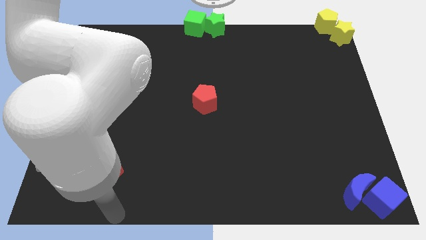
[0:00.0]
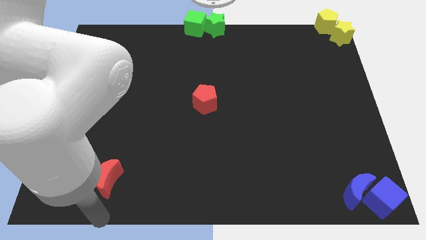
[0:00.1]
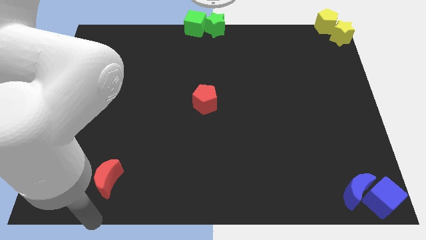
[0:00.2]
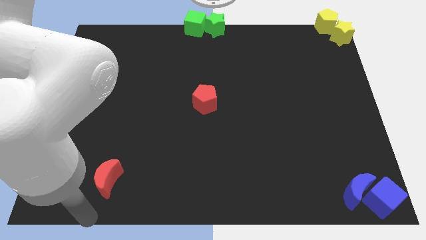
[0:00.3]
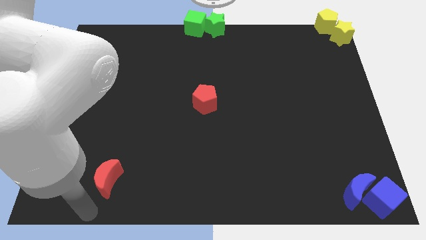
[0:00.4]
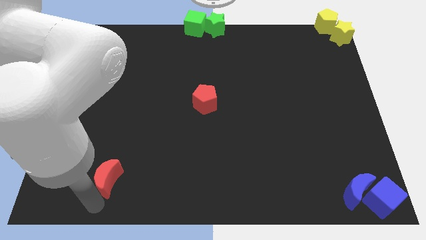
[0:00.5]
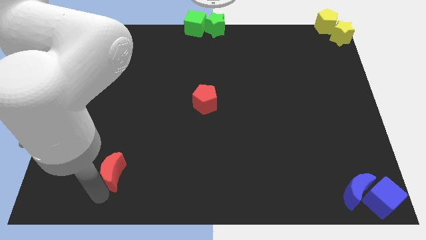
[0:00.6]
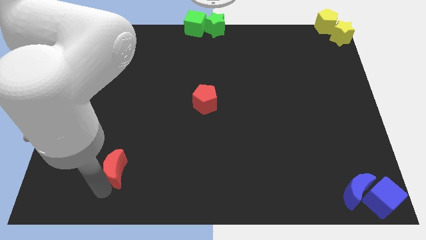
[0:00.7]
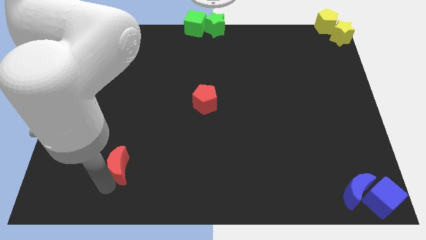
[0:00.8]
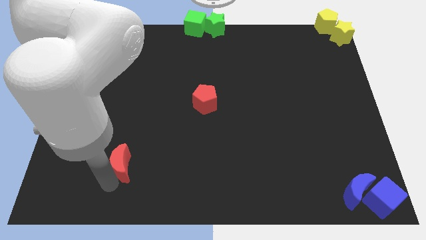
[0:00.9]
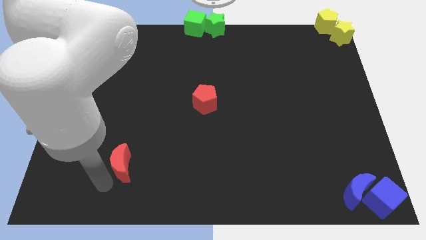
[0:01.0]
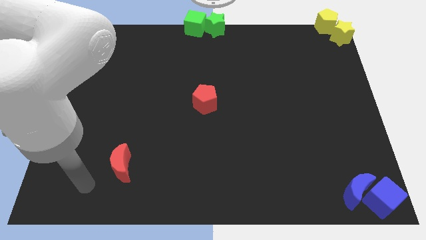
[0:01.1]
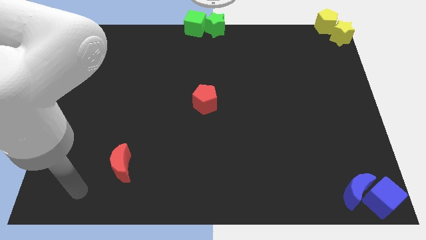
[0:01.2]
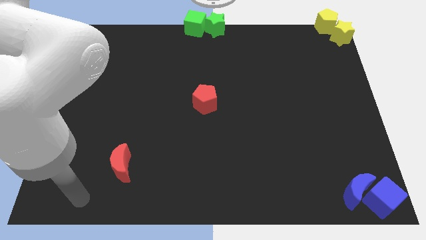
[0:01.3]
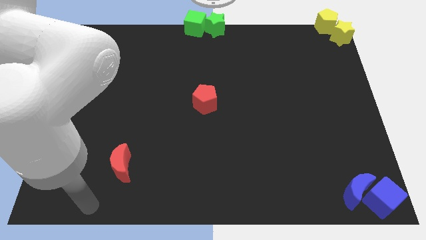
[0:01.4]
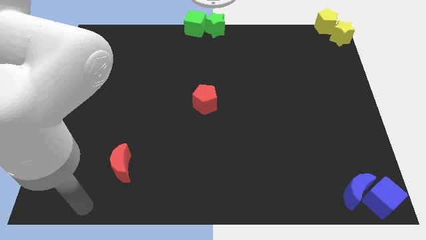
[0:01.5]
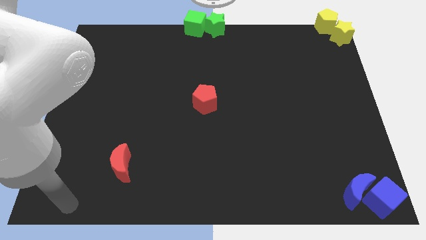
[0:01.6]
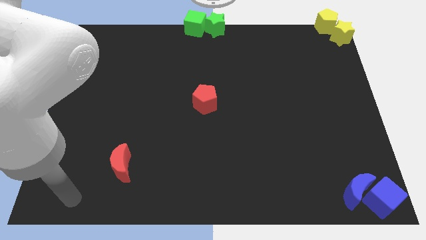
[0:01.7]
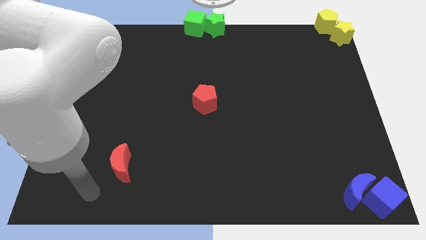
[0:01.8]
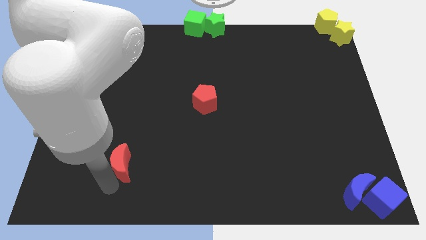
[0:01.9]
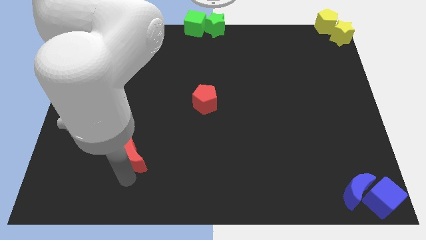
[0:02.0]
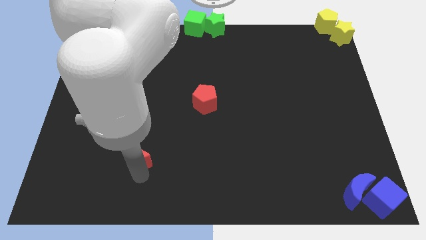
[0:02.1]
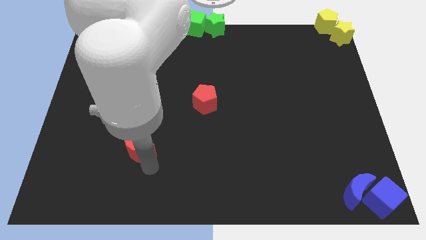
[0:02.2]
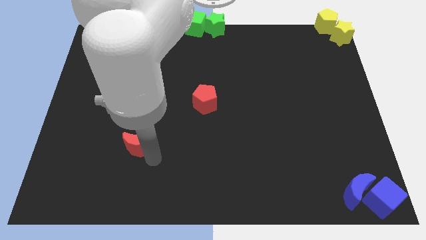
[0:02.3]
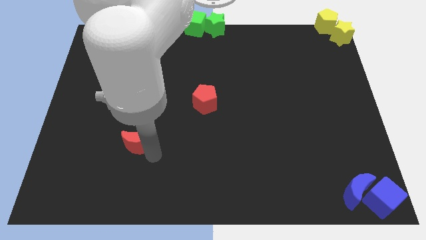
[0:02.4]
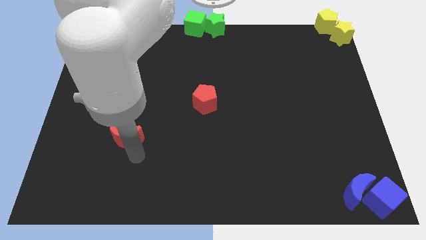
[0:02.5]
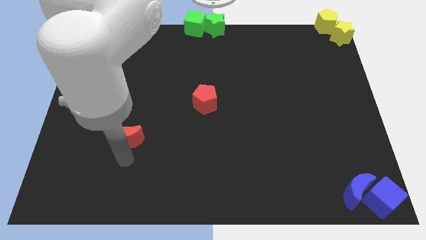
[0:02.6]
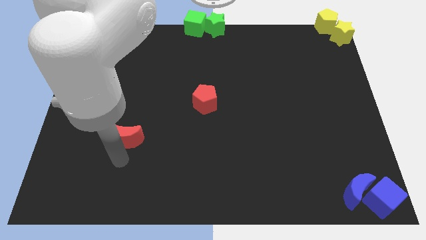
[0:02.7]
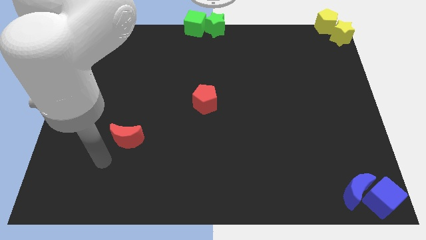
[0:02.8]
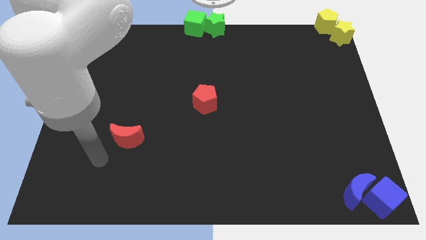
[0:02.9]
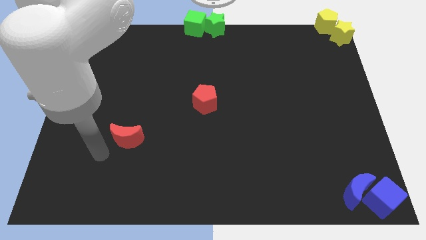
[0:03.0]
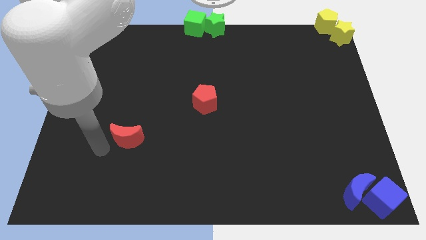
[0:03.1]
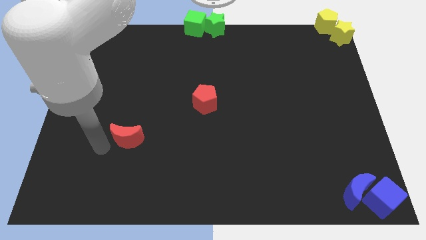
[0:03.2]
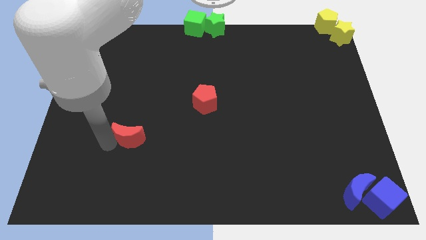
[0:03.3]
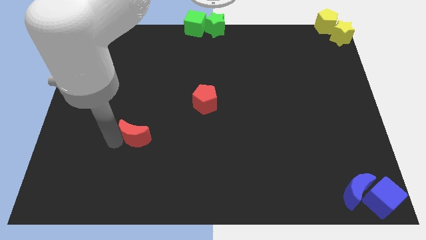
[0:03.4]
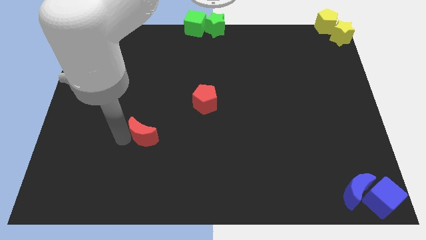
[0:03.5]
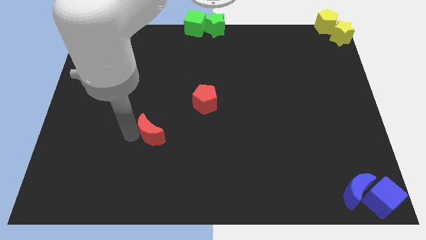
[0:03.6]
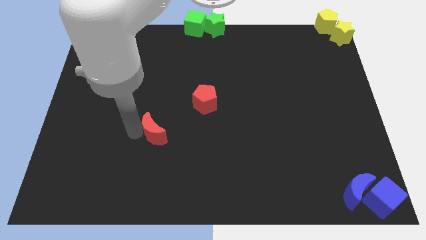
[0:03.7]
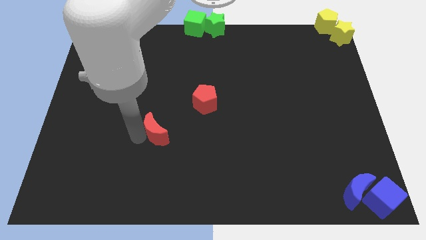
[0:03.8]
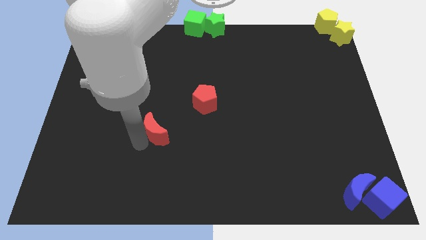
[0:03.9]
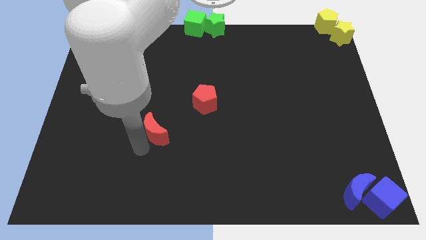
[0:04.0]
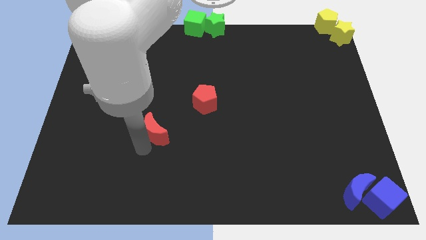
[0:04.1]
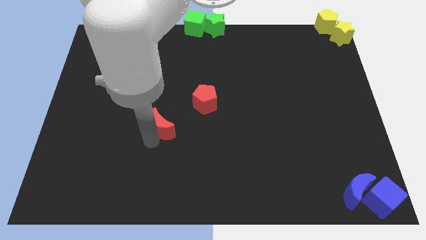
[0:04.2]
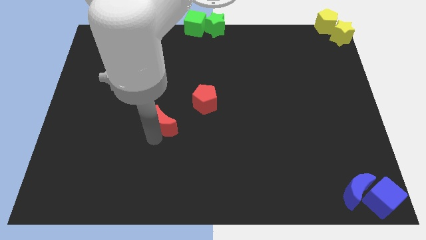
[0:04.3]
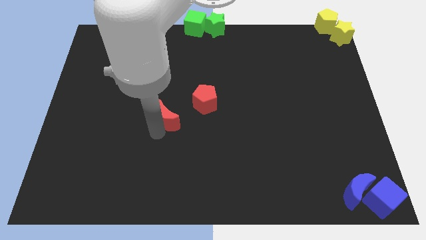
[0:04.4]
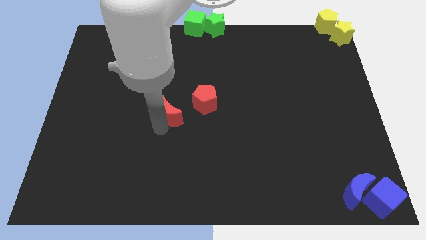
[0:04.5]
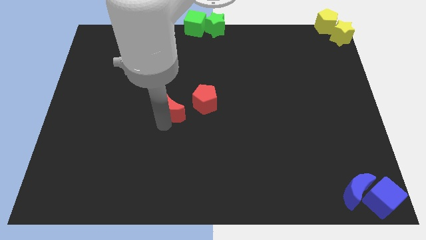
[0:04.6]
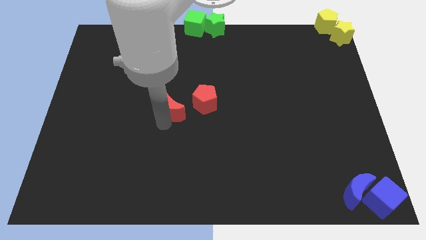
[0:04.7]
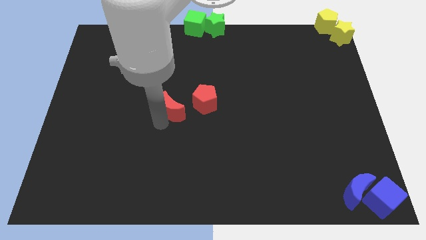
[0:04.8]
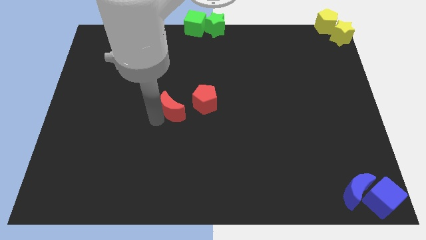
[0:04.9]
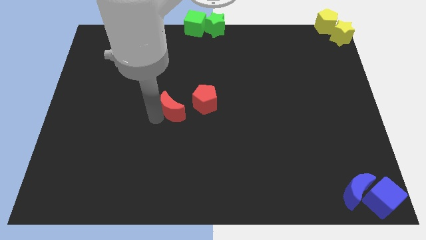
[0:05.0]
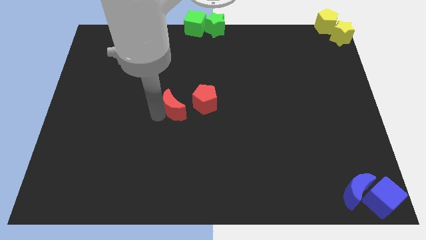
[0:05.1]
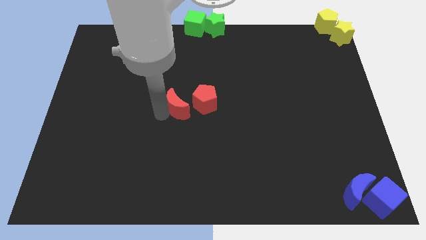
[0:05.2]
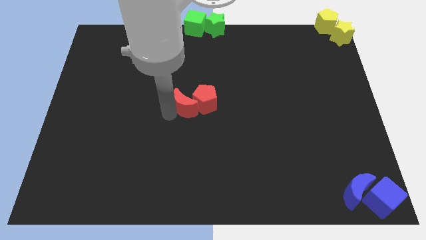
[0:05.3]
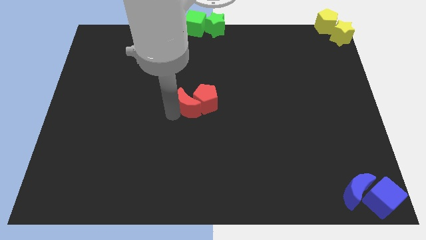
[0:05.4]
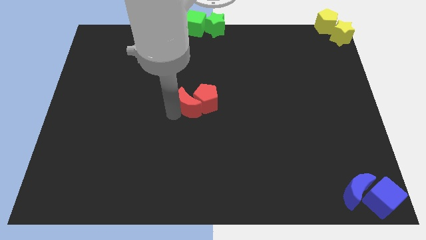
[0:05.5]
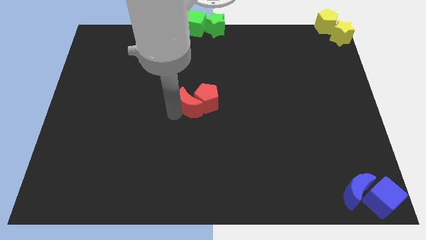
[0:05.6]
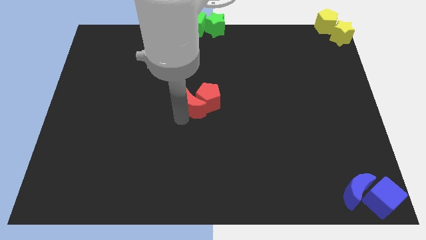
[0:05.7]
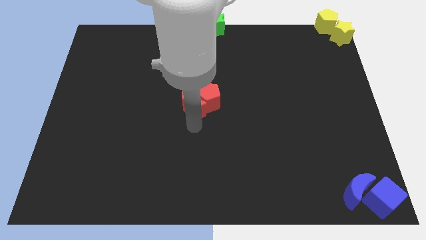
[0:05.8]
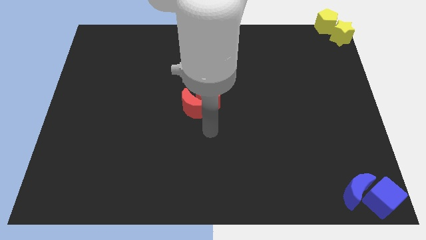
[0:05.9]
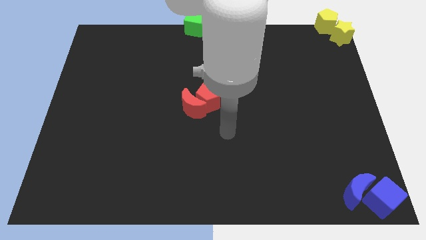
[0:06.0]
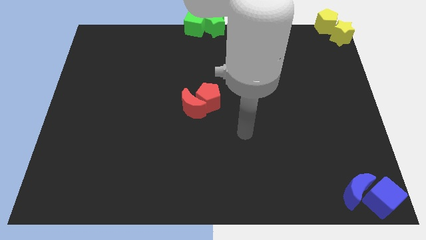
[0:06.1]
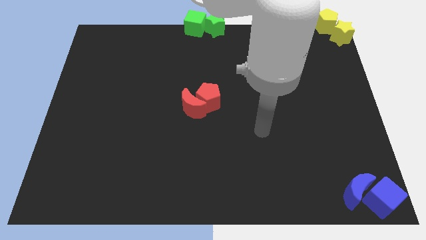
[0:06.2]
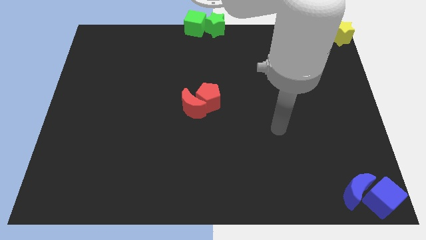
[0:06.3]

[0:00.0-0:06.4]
push the red crescent into the red pentagon

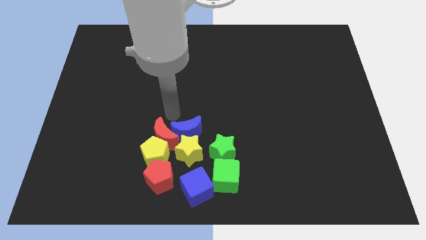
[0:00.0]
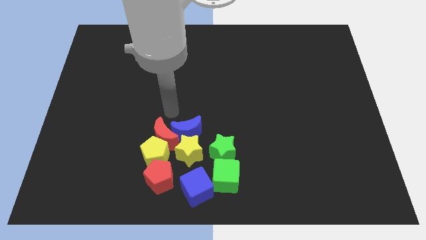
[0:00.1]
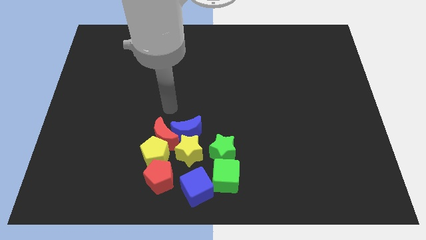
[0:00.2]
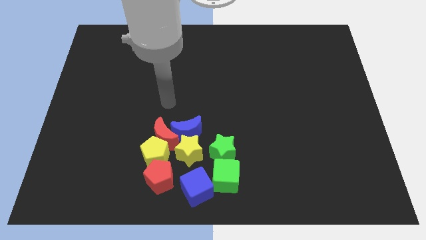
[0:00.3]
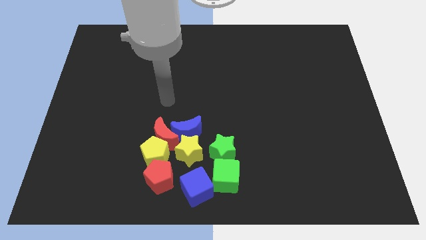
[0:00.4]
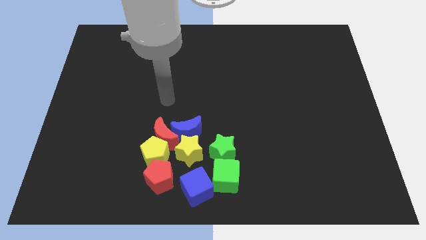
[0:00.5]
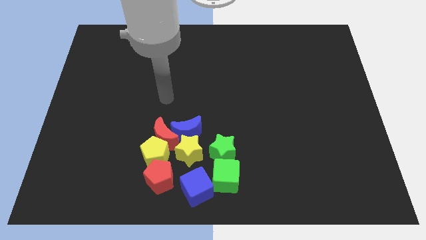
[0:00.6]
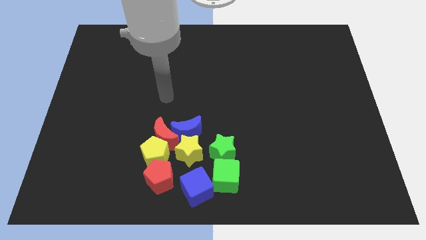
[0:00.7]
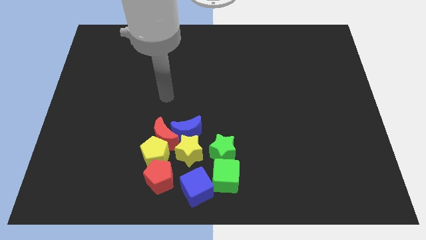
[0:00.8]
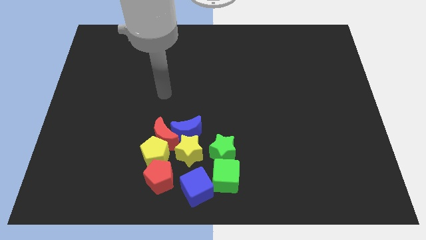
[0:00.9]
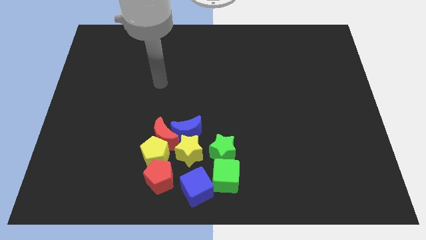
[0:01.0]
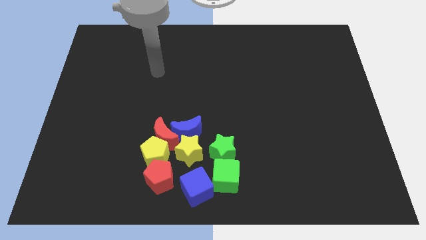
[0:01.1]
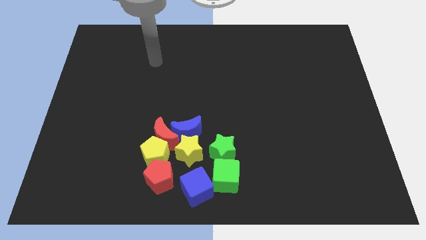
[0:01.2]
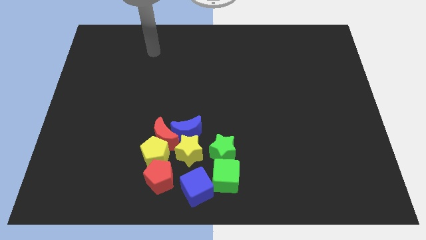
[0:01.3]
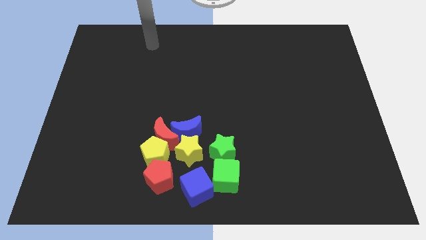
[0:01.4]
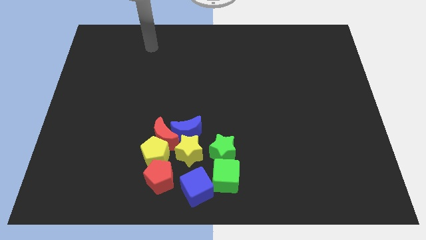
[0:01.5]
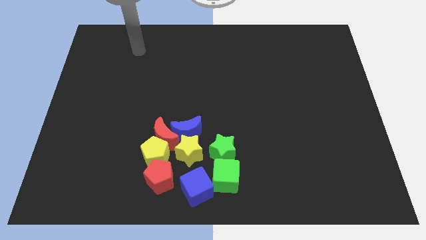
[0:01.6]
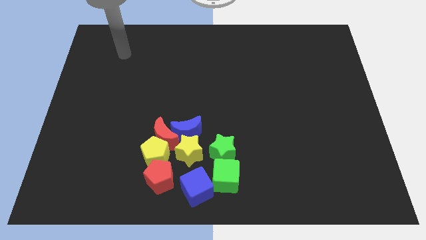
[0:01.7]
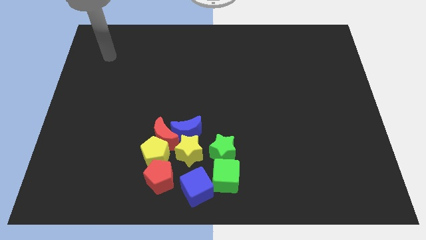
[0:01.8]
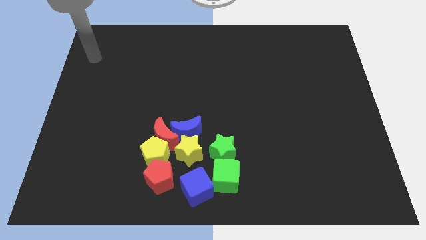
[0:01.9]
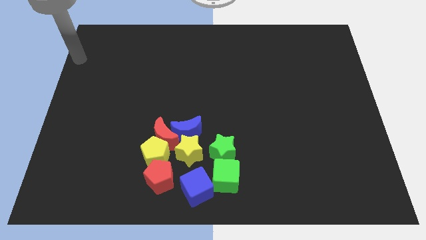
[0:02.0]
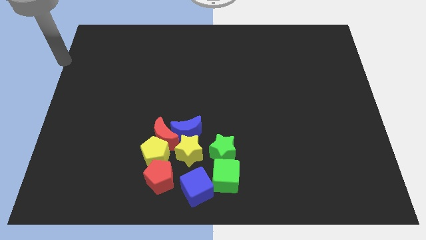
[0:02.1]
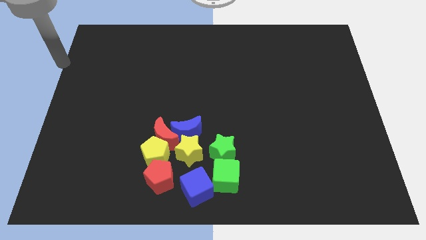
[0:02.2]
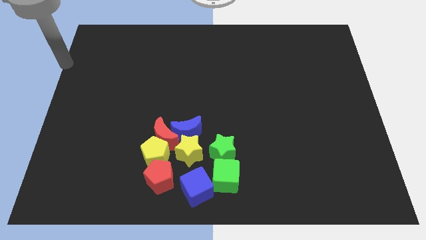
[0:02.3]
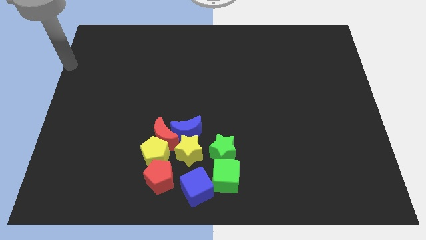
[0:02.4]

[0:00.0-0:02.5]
move the arm away from the blue moon
